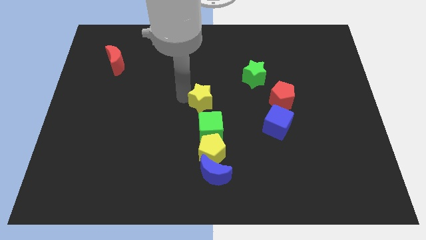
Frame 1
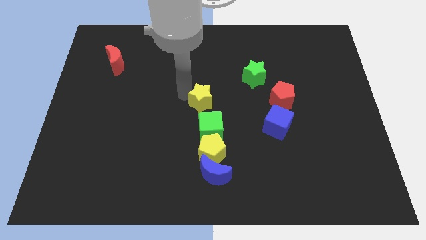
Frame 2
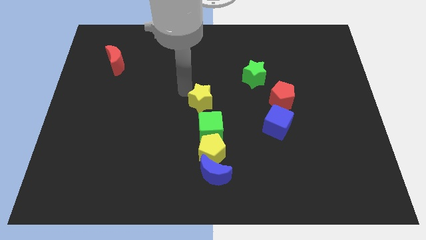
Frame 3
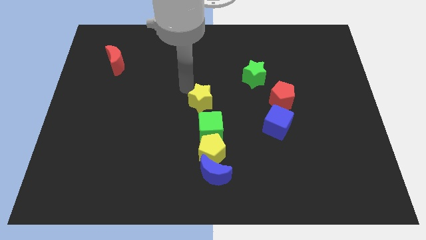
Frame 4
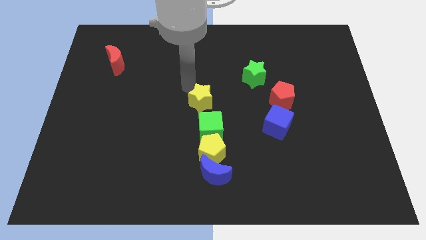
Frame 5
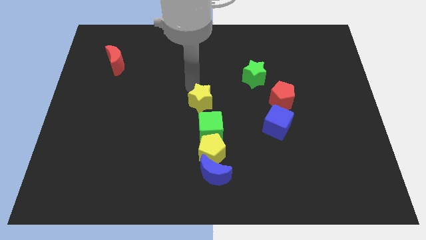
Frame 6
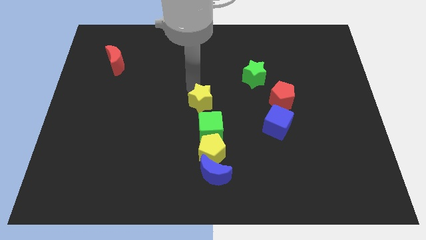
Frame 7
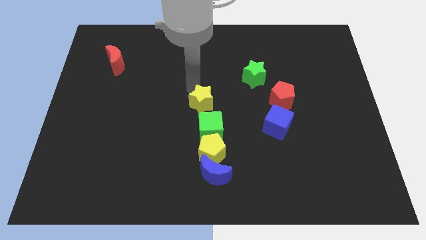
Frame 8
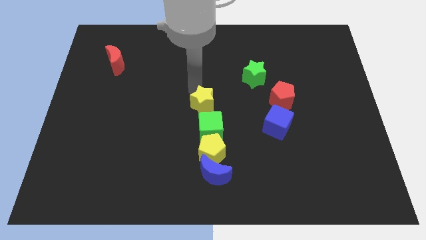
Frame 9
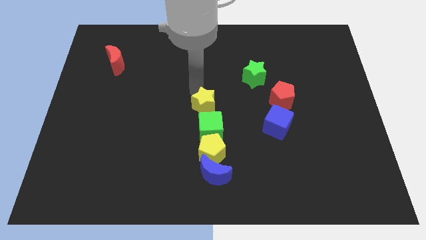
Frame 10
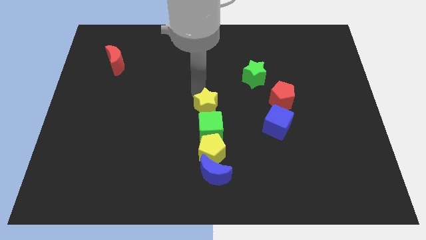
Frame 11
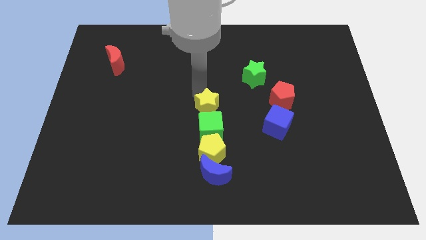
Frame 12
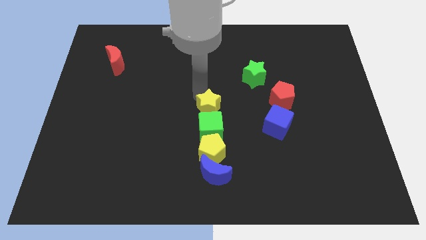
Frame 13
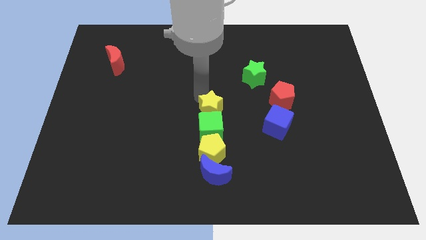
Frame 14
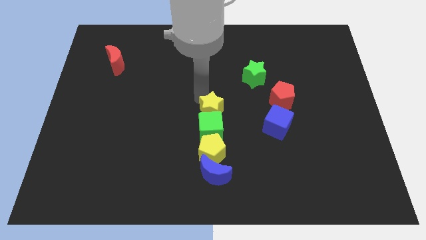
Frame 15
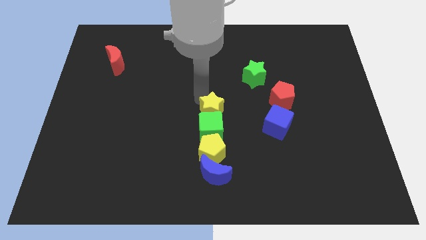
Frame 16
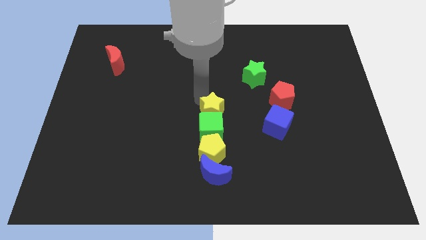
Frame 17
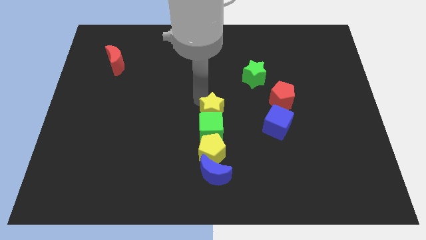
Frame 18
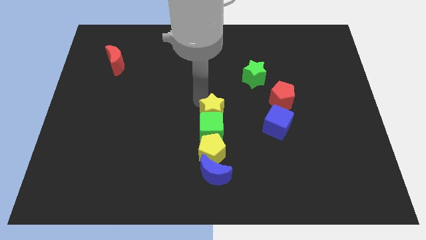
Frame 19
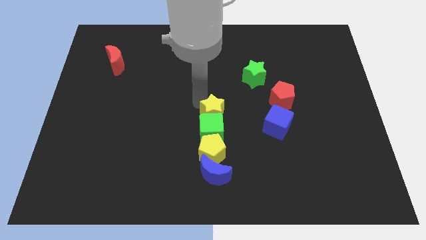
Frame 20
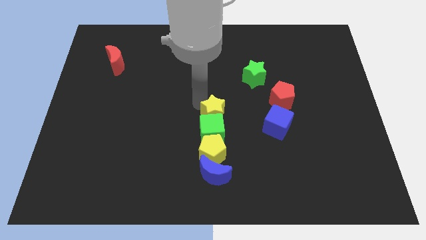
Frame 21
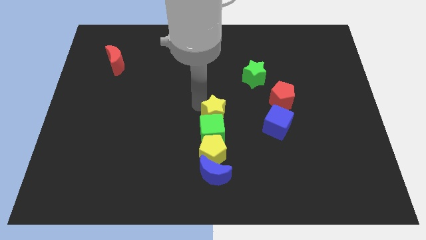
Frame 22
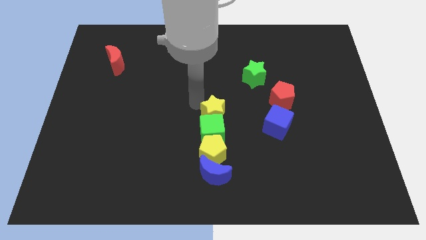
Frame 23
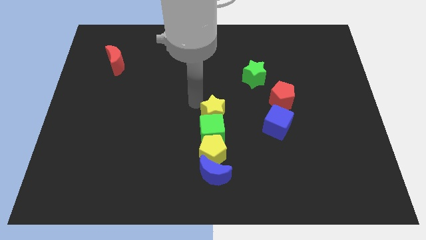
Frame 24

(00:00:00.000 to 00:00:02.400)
move the yellow star into the green cube

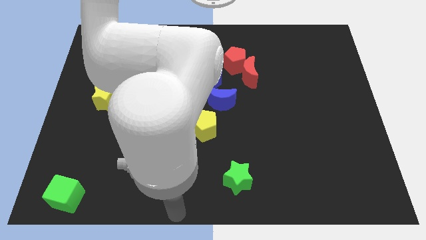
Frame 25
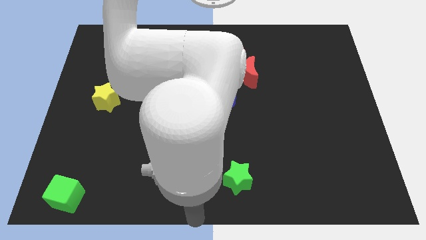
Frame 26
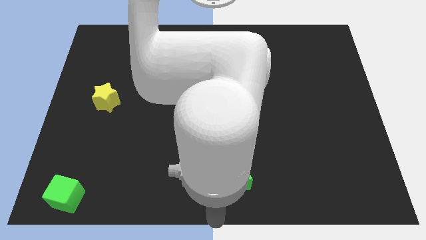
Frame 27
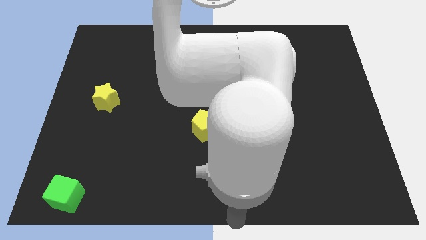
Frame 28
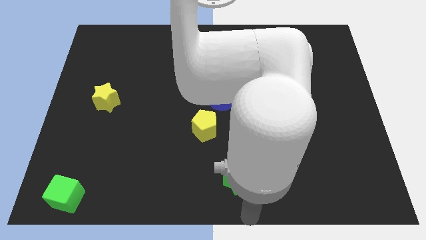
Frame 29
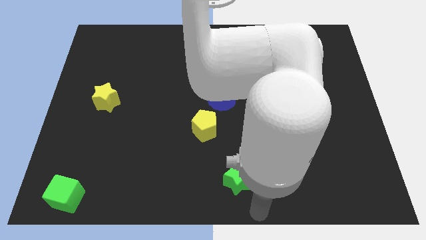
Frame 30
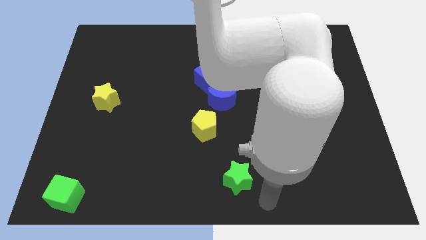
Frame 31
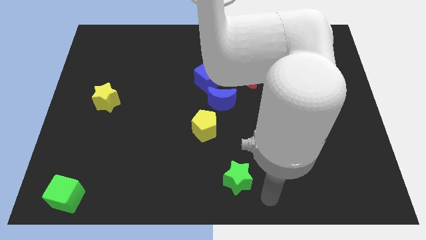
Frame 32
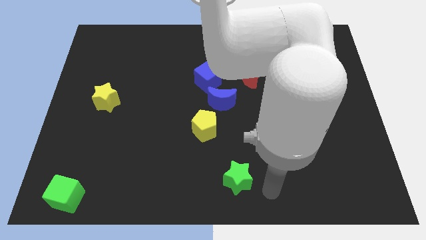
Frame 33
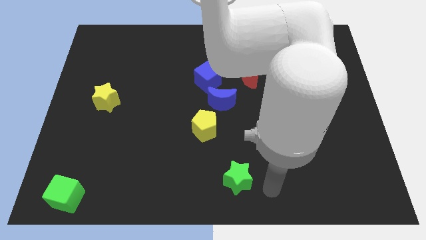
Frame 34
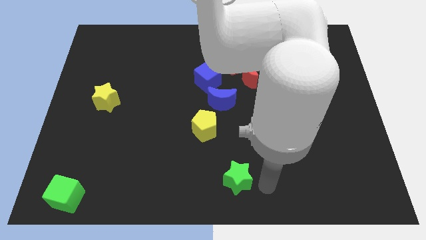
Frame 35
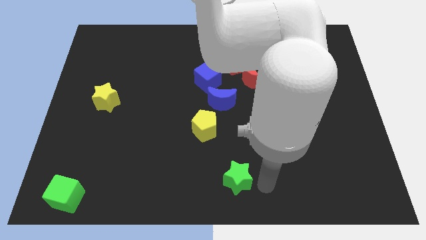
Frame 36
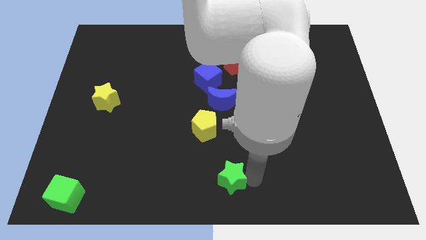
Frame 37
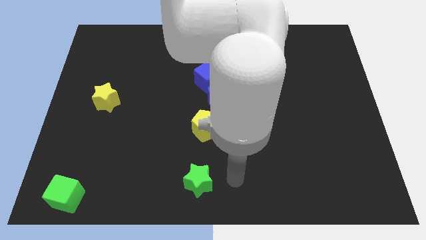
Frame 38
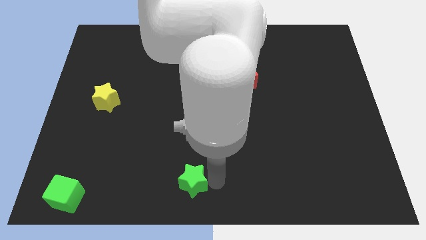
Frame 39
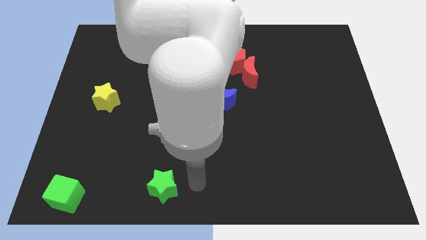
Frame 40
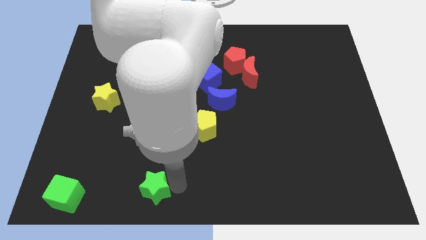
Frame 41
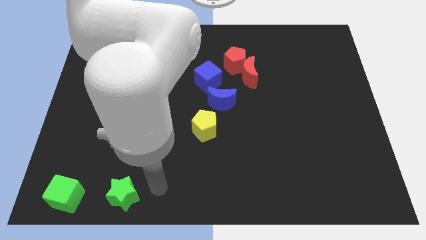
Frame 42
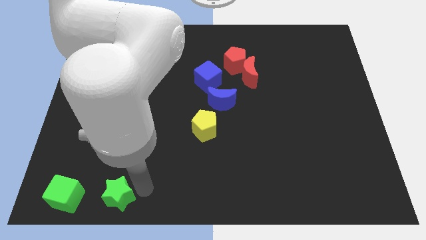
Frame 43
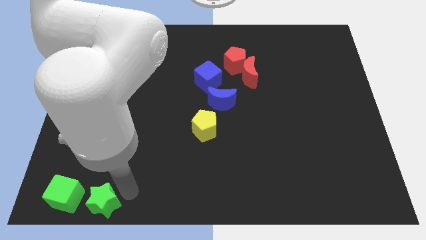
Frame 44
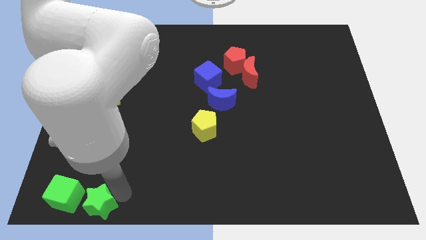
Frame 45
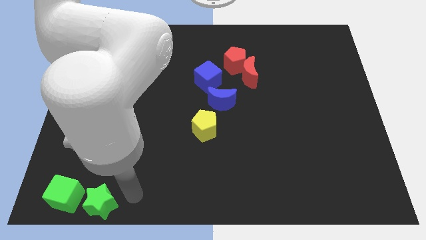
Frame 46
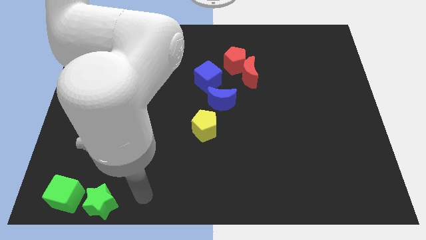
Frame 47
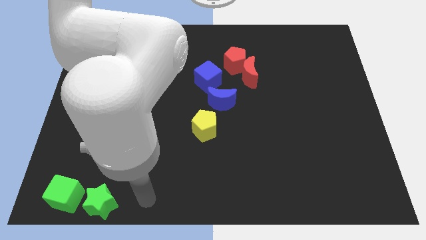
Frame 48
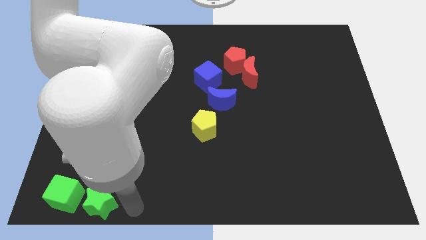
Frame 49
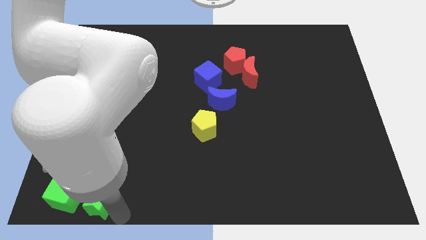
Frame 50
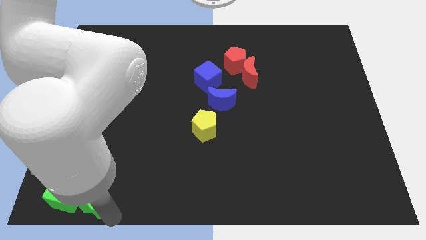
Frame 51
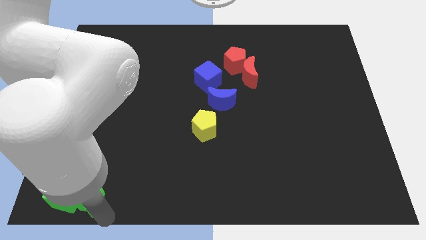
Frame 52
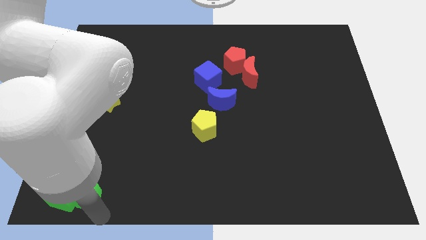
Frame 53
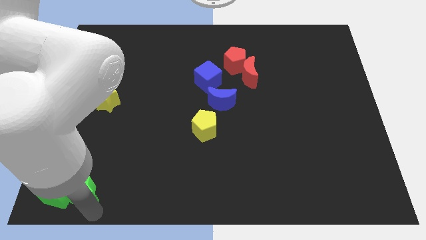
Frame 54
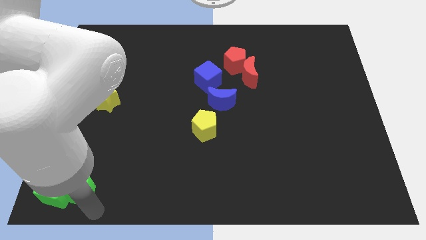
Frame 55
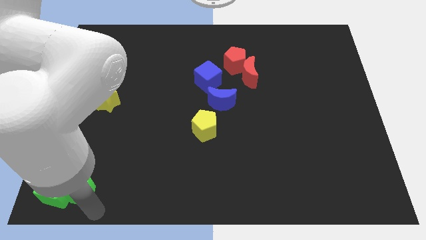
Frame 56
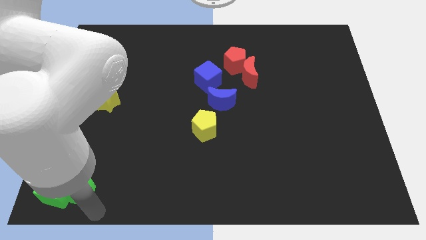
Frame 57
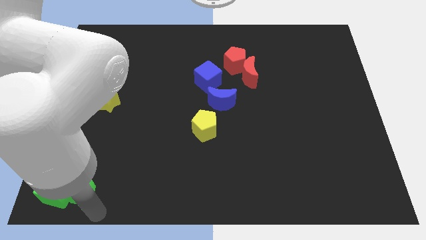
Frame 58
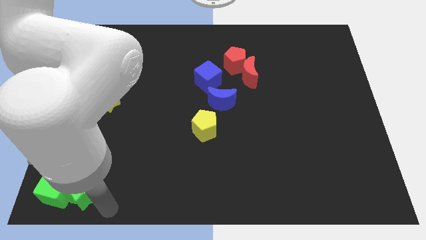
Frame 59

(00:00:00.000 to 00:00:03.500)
push the green star into the green cube

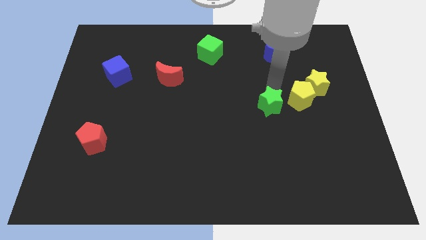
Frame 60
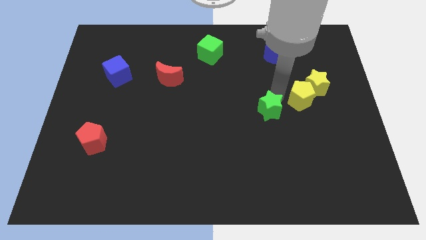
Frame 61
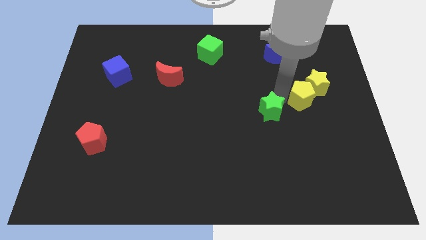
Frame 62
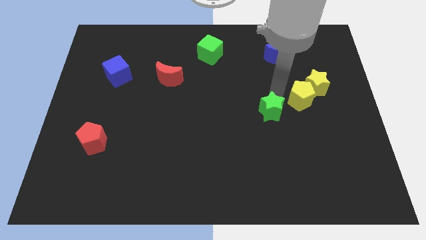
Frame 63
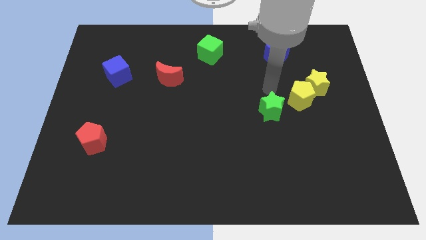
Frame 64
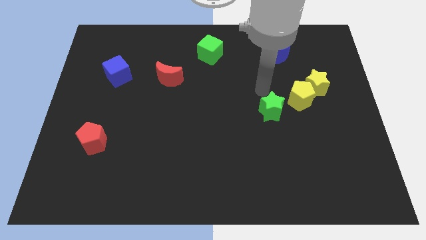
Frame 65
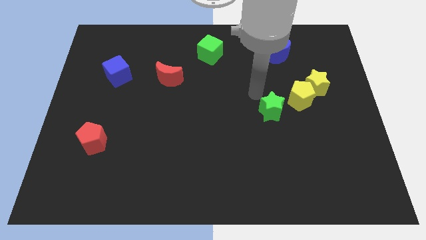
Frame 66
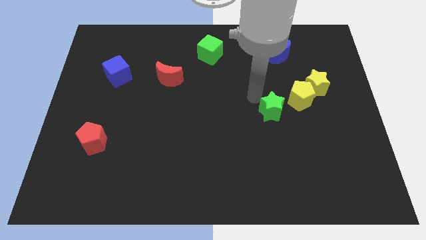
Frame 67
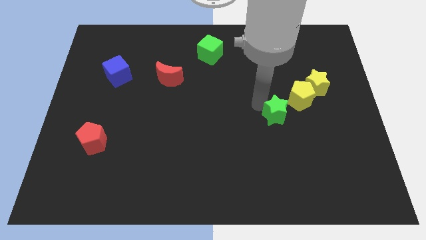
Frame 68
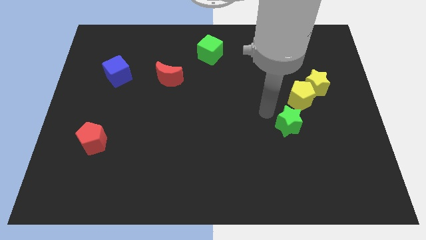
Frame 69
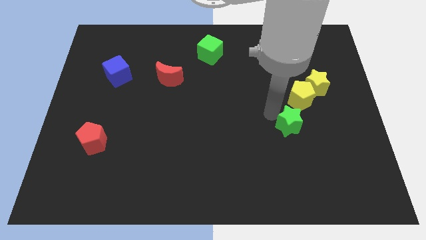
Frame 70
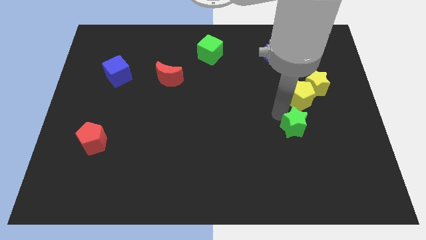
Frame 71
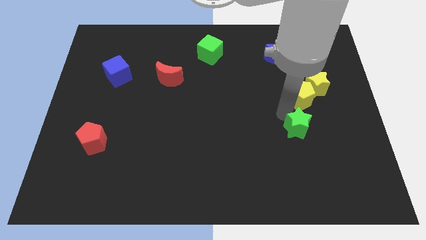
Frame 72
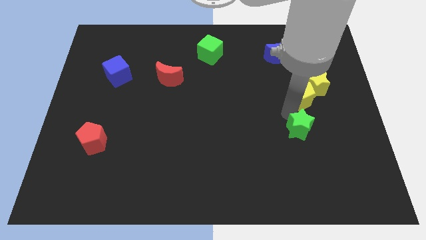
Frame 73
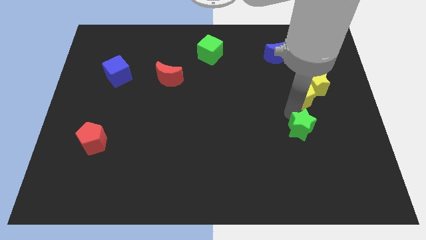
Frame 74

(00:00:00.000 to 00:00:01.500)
put the green star below the yellow pentagon

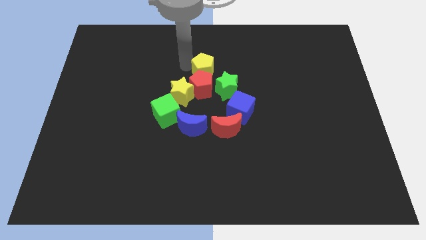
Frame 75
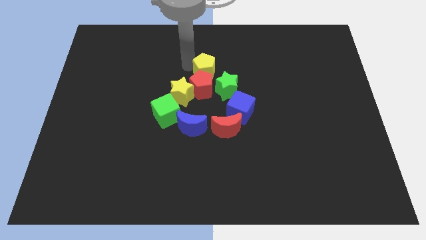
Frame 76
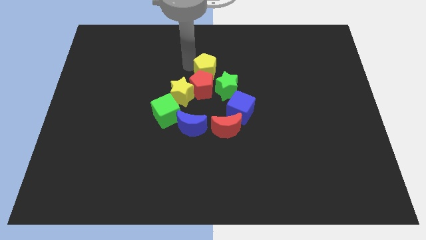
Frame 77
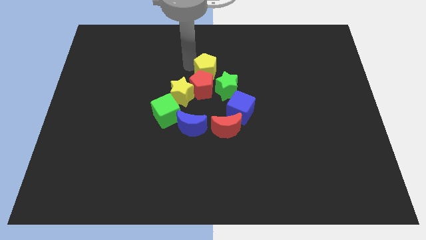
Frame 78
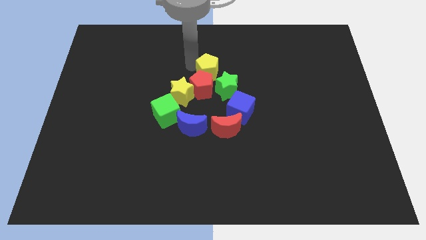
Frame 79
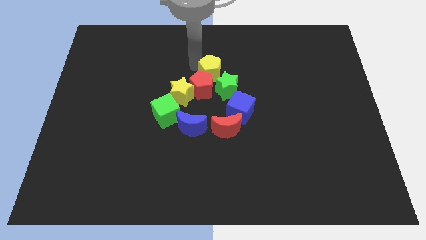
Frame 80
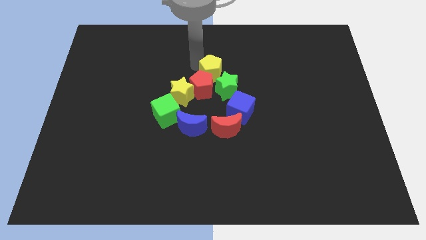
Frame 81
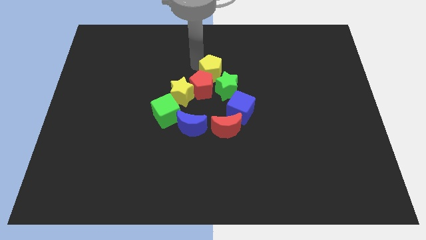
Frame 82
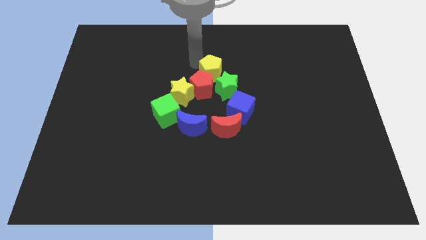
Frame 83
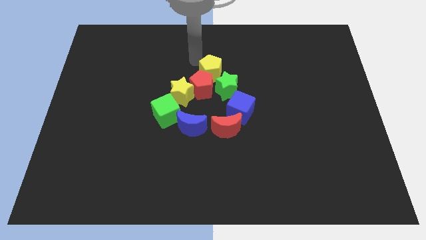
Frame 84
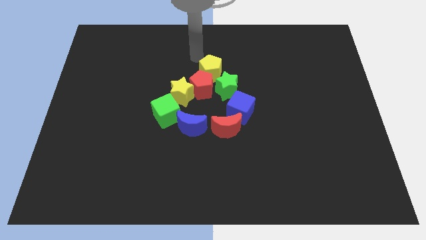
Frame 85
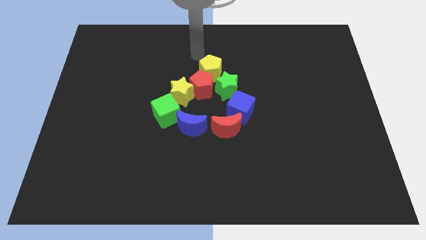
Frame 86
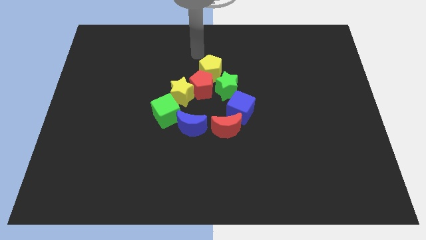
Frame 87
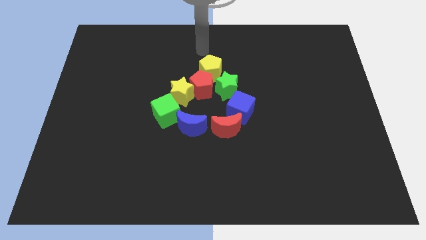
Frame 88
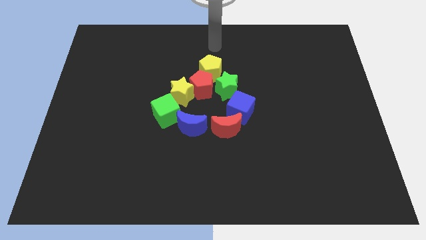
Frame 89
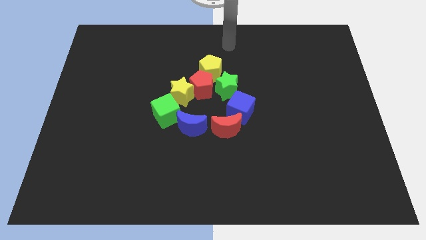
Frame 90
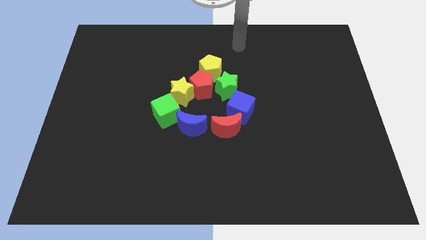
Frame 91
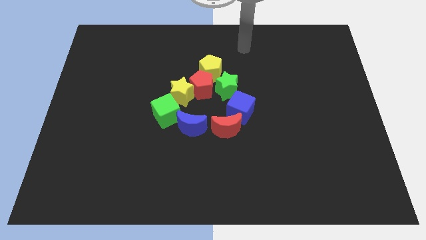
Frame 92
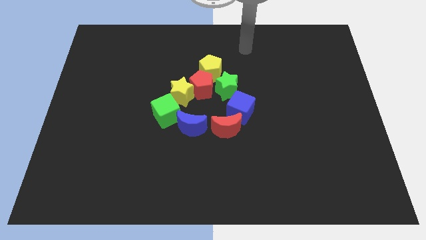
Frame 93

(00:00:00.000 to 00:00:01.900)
push yellow pentagon towards green star
